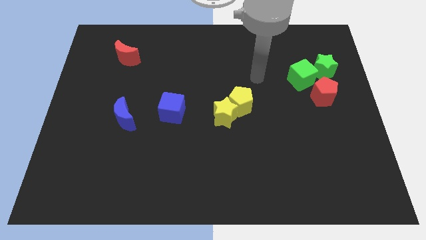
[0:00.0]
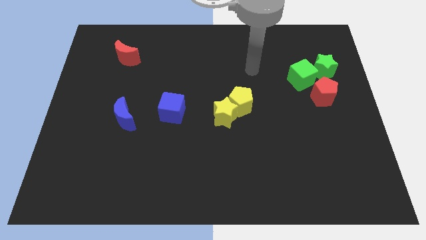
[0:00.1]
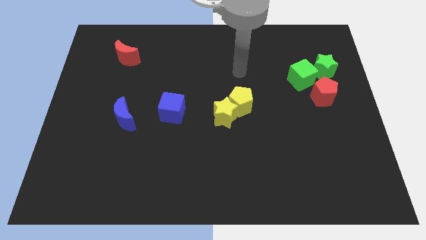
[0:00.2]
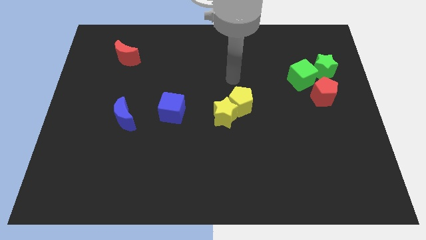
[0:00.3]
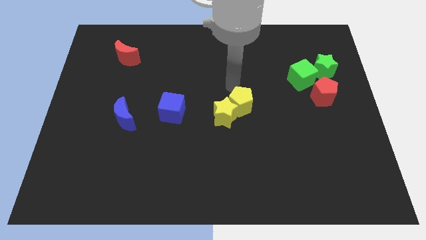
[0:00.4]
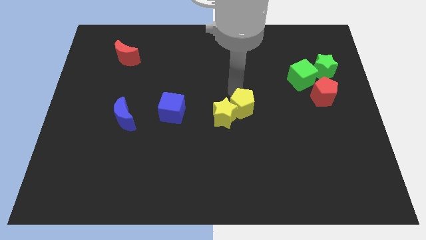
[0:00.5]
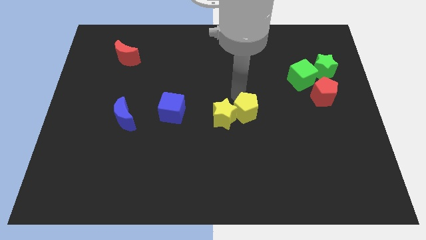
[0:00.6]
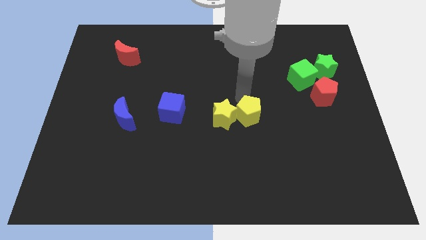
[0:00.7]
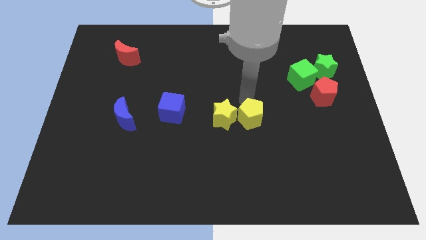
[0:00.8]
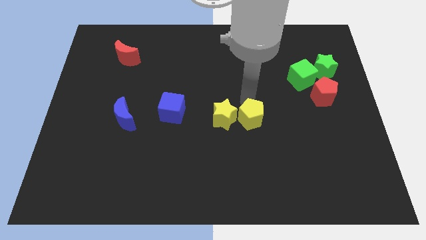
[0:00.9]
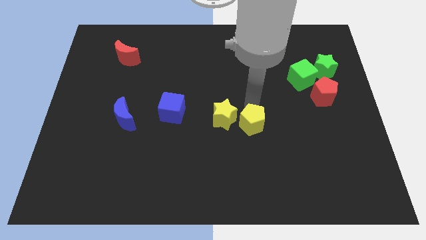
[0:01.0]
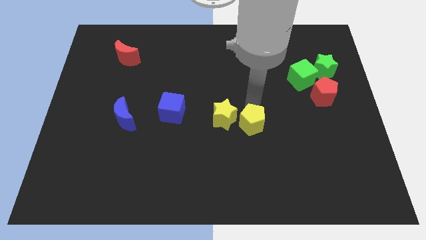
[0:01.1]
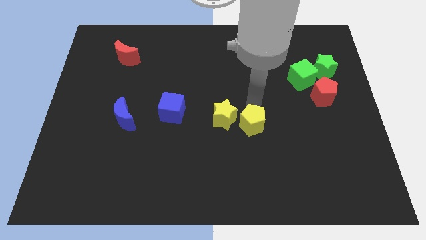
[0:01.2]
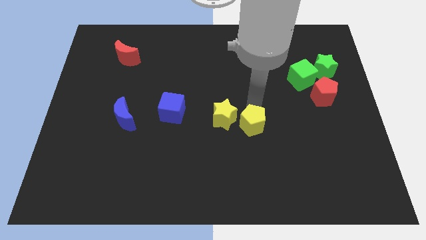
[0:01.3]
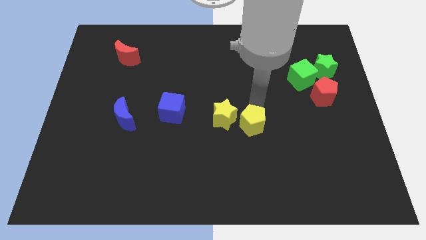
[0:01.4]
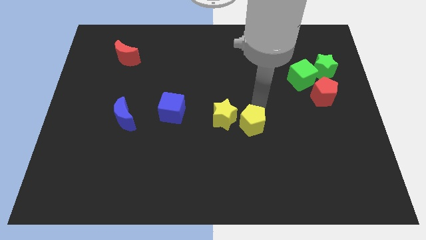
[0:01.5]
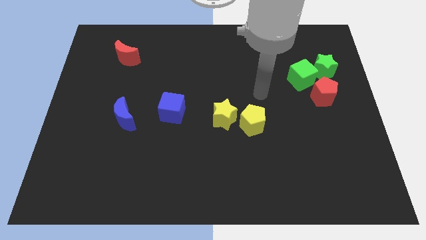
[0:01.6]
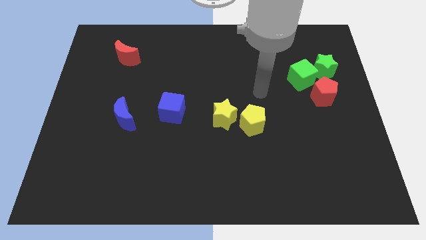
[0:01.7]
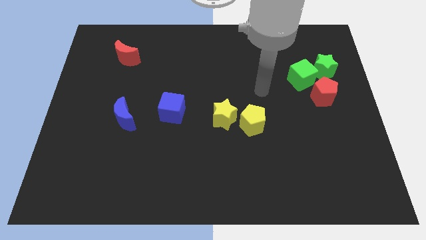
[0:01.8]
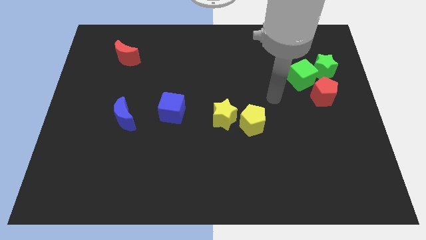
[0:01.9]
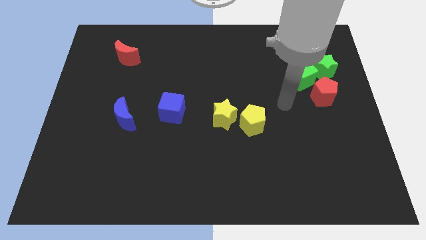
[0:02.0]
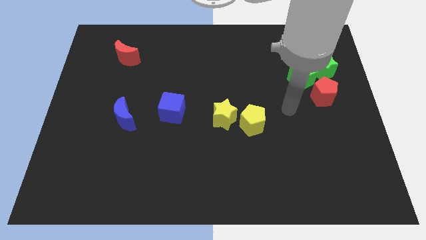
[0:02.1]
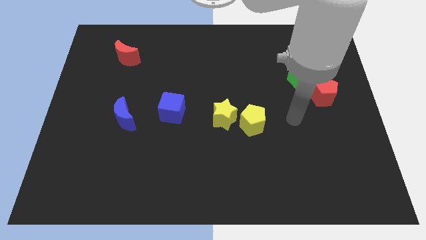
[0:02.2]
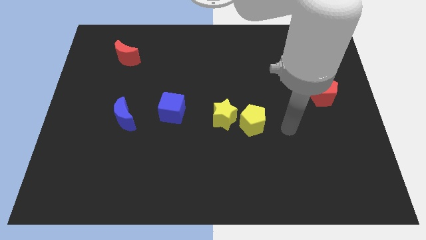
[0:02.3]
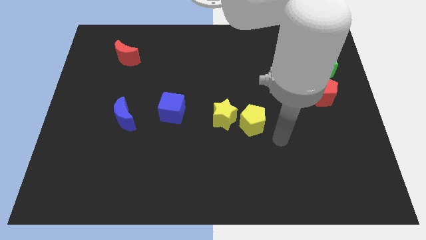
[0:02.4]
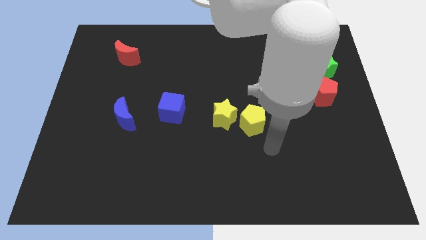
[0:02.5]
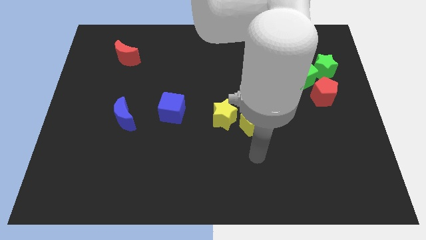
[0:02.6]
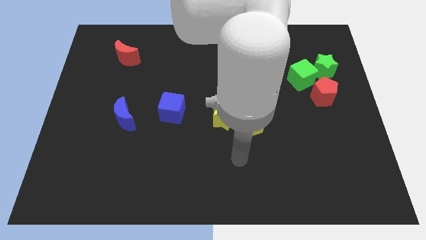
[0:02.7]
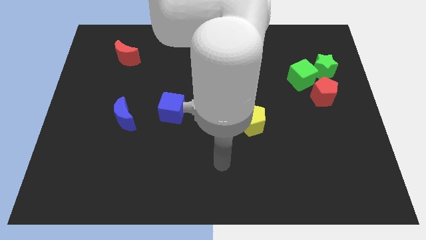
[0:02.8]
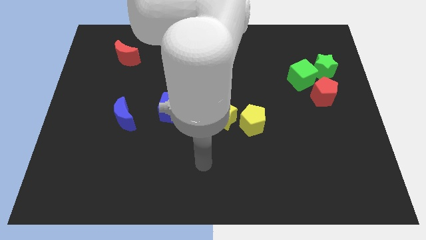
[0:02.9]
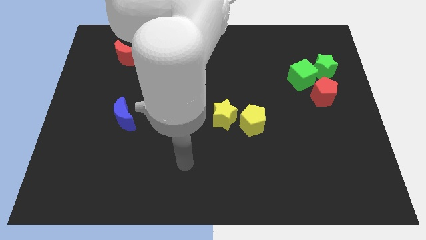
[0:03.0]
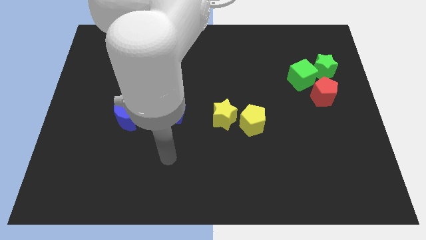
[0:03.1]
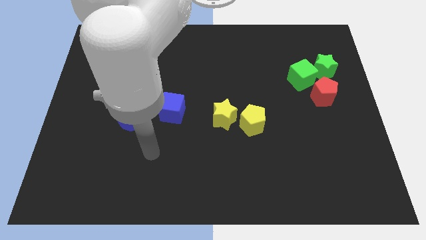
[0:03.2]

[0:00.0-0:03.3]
push the yellow pentagon slightly towards down

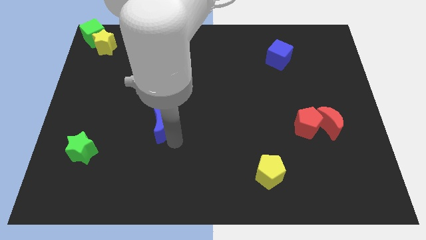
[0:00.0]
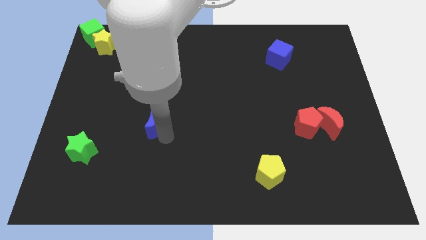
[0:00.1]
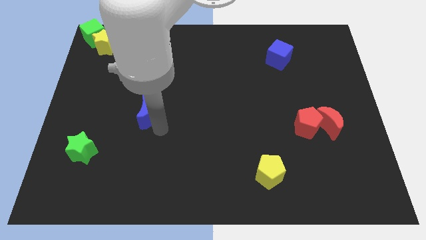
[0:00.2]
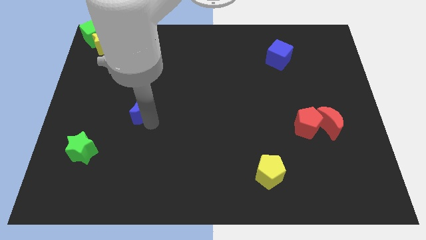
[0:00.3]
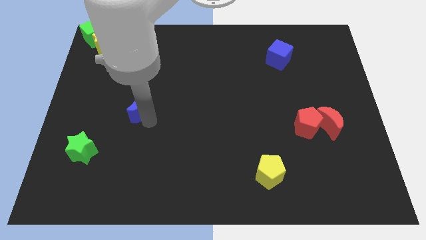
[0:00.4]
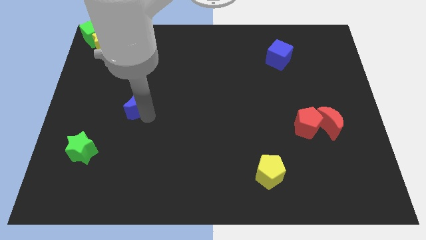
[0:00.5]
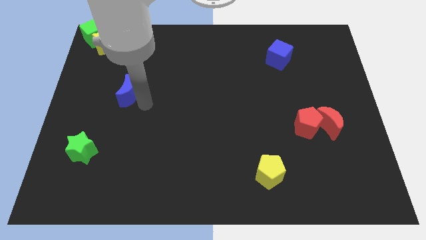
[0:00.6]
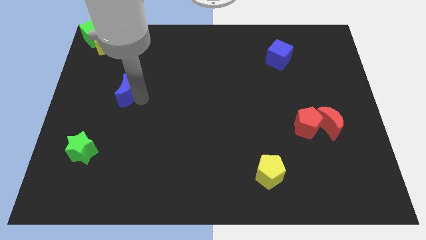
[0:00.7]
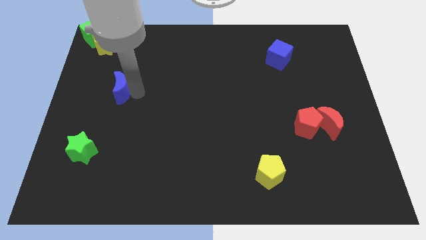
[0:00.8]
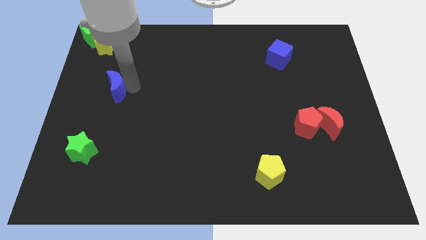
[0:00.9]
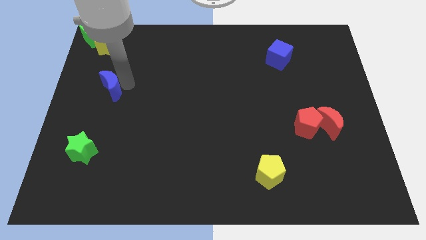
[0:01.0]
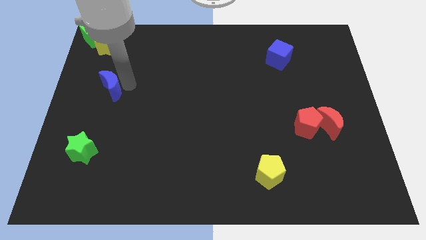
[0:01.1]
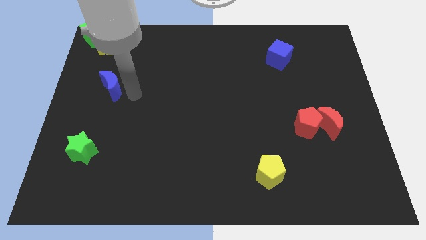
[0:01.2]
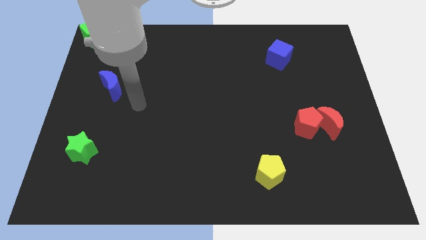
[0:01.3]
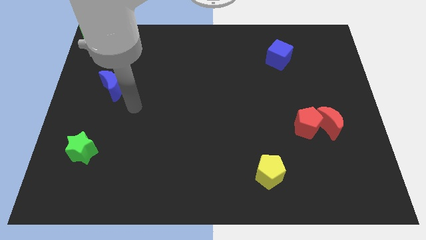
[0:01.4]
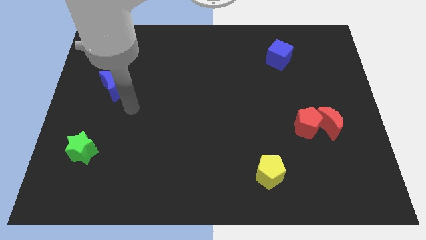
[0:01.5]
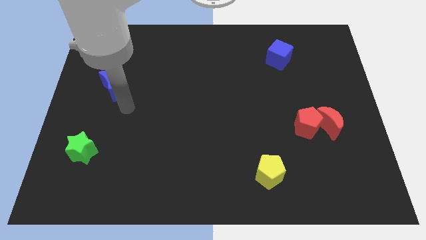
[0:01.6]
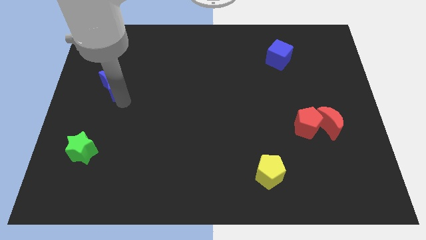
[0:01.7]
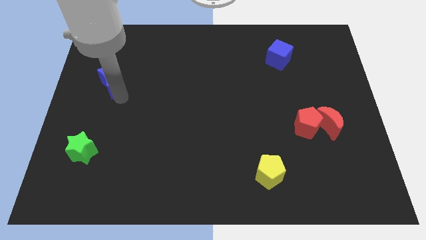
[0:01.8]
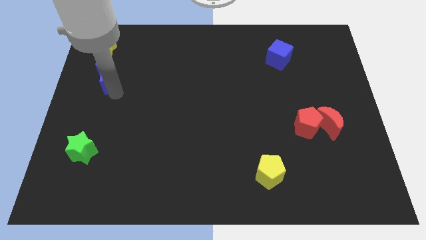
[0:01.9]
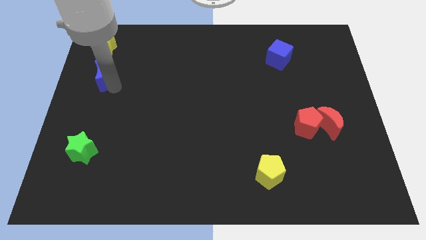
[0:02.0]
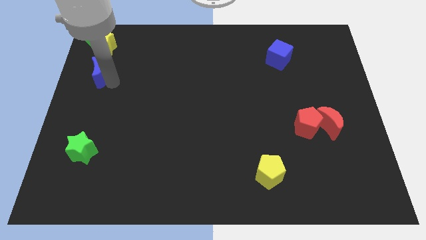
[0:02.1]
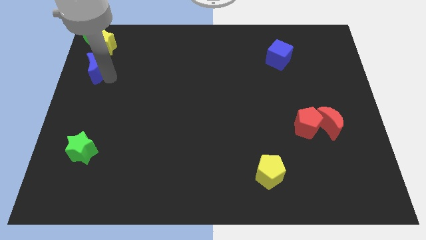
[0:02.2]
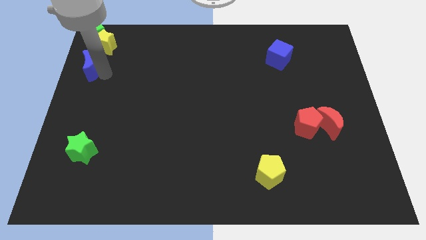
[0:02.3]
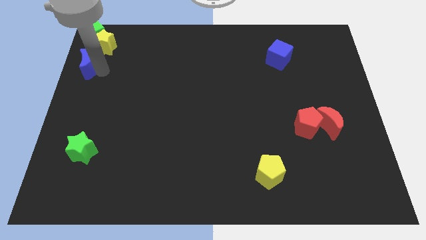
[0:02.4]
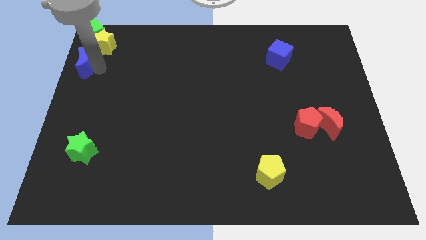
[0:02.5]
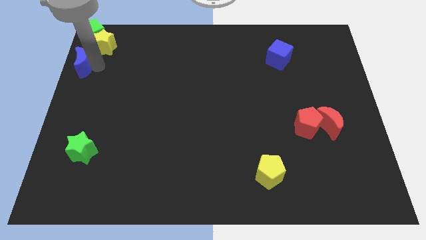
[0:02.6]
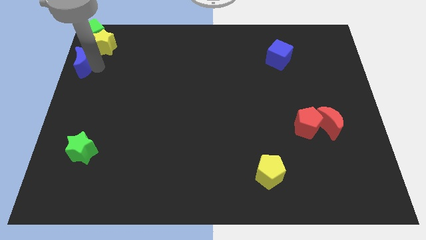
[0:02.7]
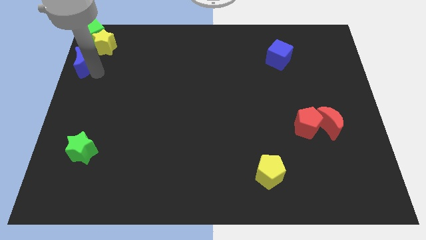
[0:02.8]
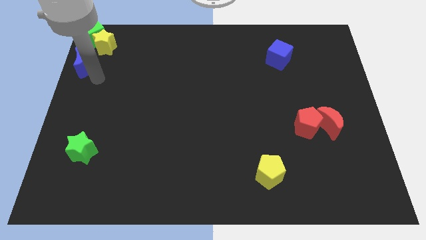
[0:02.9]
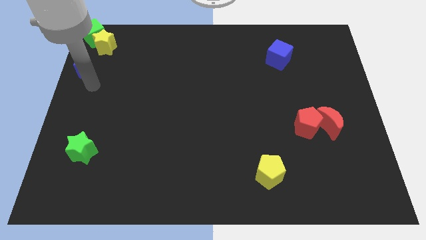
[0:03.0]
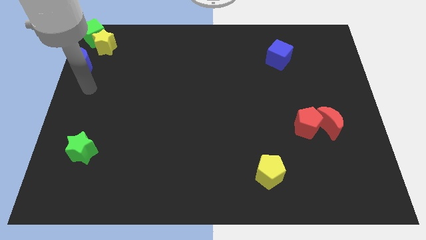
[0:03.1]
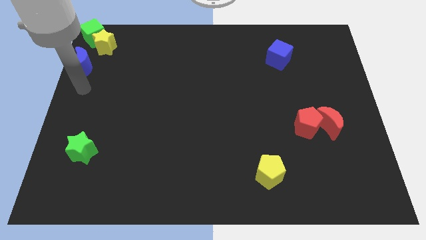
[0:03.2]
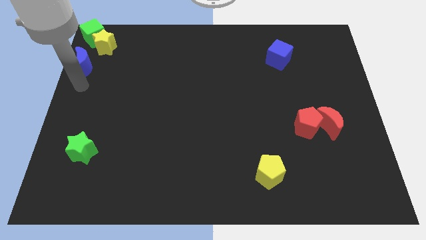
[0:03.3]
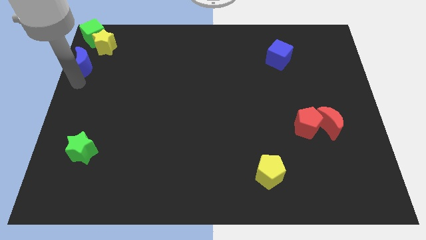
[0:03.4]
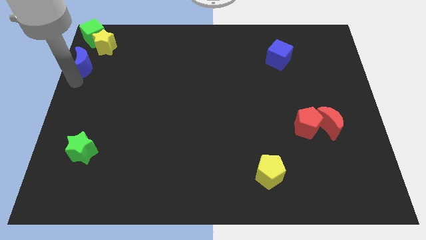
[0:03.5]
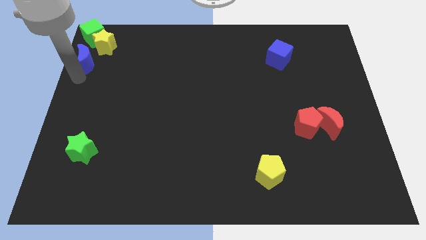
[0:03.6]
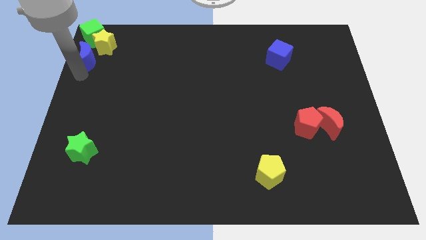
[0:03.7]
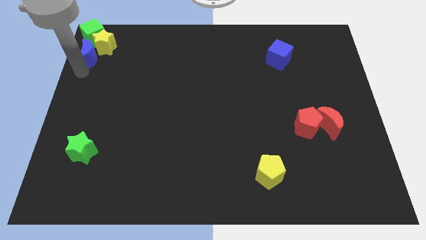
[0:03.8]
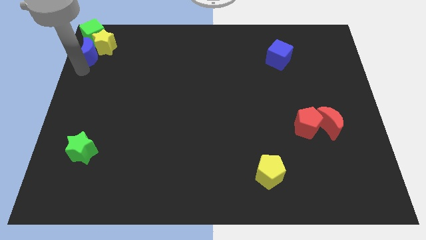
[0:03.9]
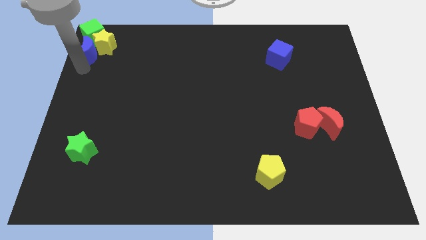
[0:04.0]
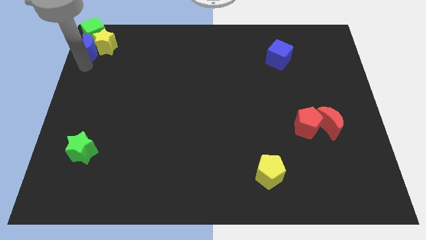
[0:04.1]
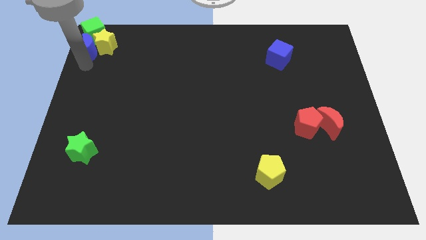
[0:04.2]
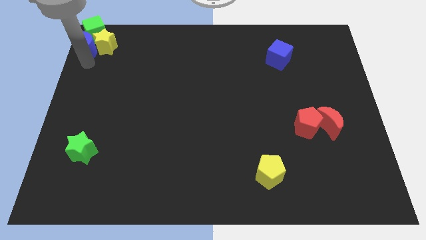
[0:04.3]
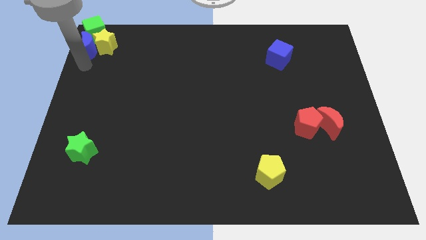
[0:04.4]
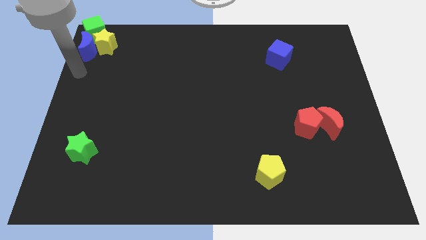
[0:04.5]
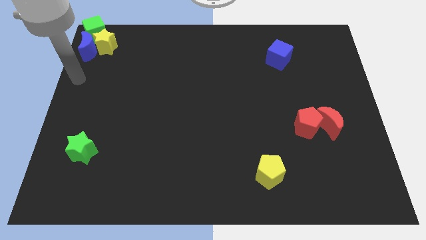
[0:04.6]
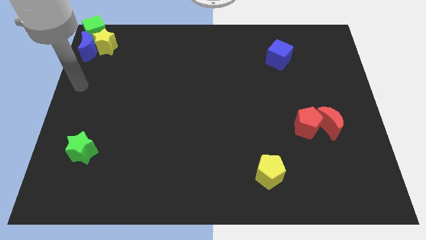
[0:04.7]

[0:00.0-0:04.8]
move the blue crescent to the left of the yellow star

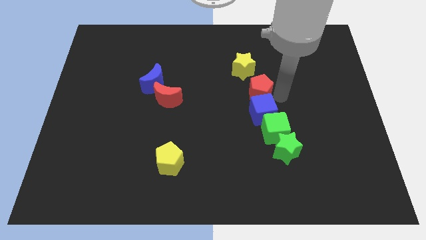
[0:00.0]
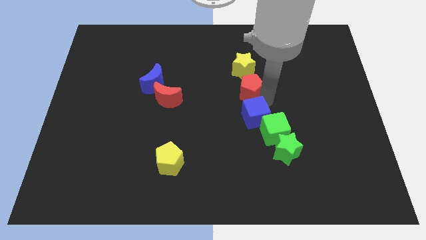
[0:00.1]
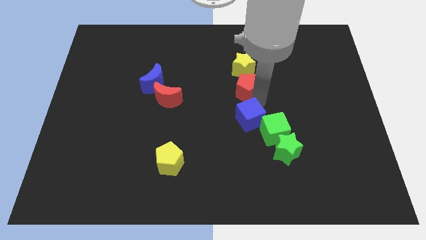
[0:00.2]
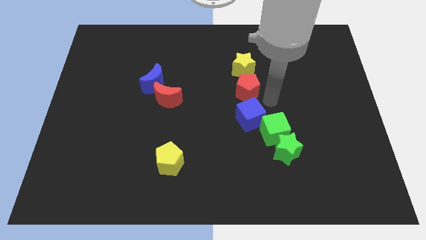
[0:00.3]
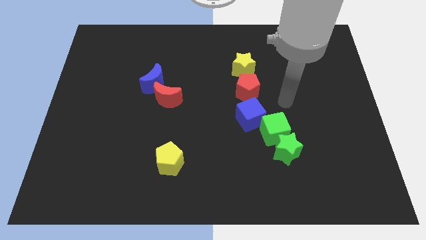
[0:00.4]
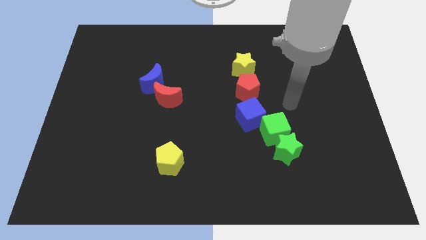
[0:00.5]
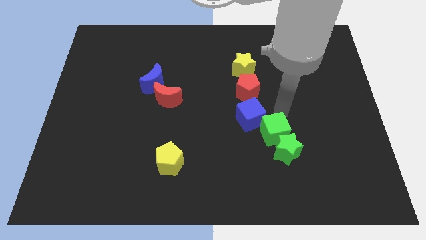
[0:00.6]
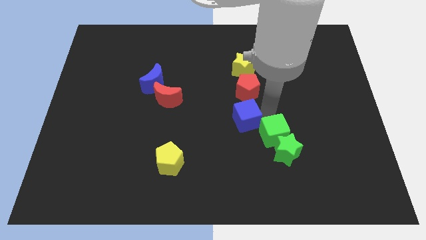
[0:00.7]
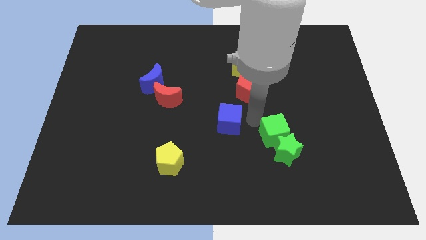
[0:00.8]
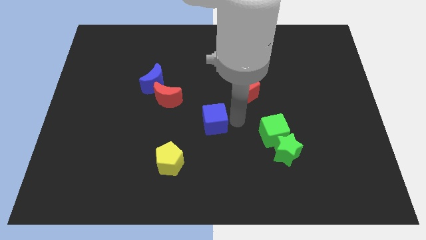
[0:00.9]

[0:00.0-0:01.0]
separate blue cube and red pentagon
